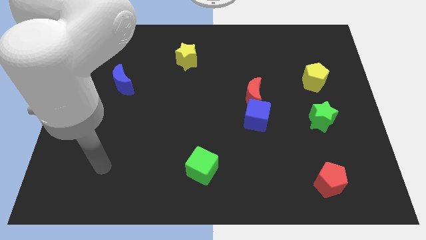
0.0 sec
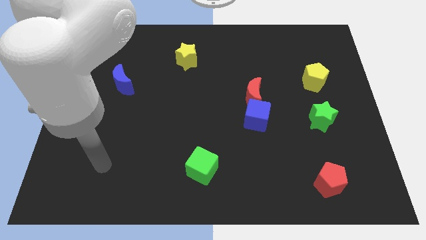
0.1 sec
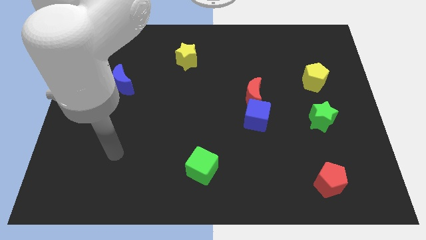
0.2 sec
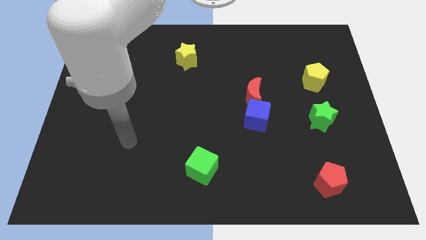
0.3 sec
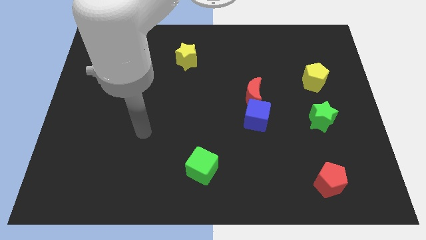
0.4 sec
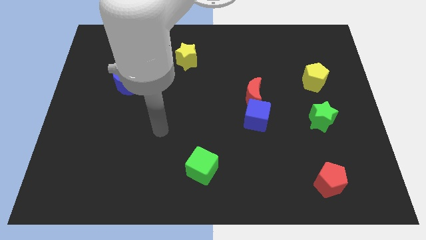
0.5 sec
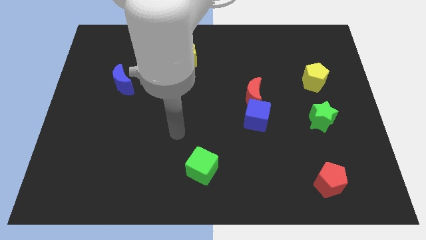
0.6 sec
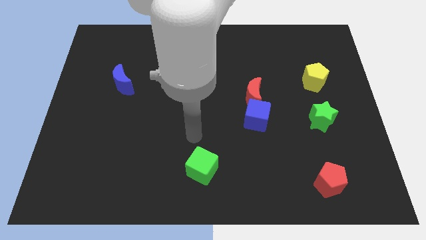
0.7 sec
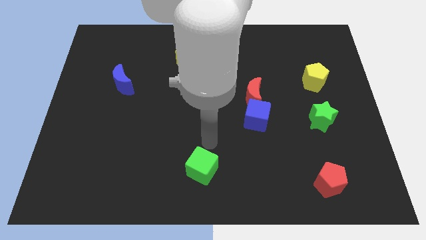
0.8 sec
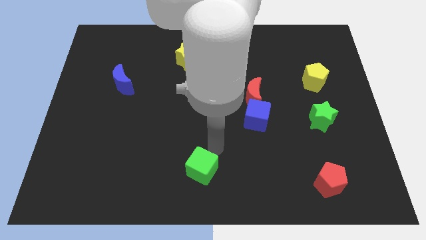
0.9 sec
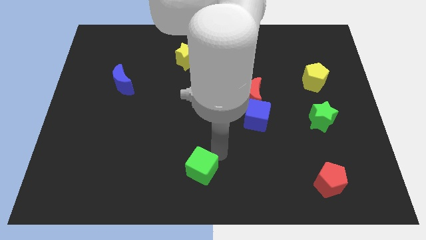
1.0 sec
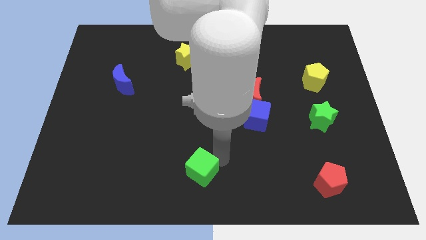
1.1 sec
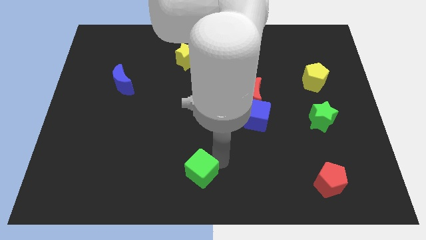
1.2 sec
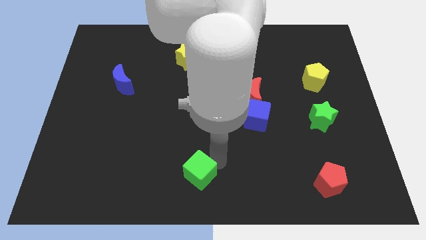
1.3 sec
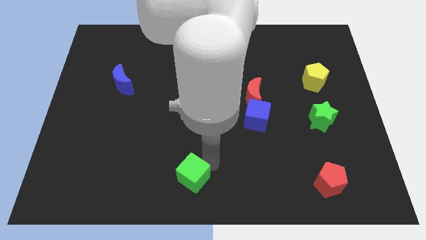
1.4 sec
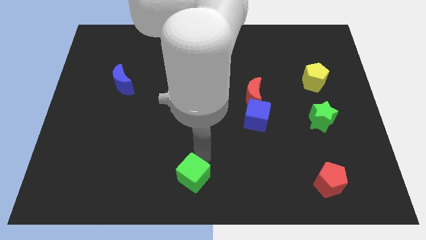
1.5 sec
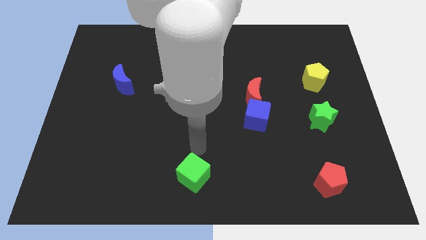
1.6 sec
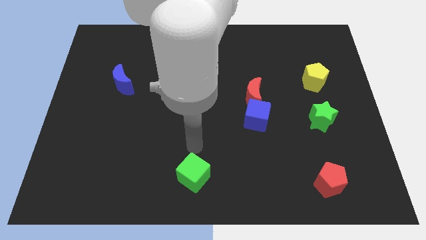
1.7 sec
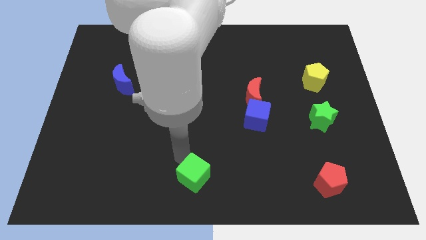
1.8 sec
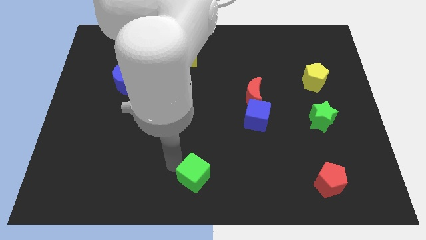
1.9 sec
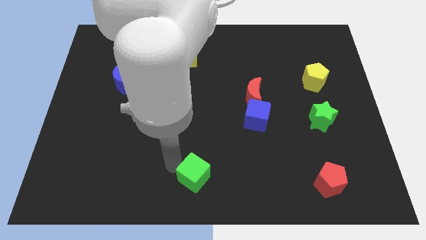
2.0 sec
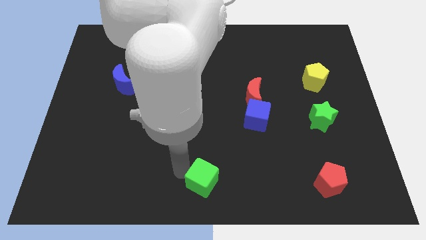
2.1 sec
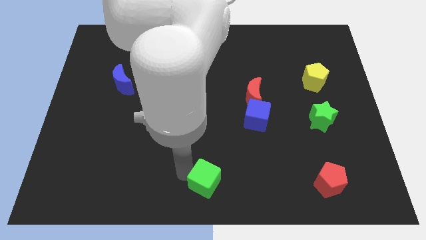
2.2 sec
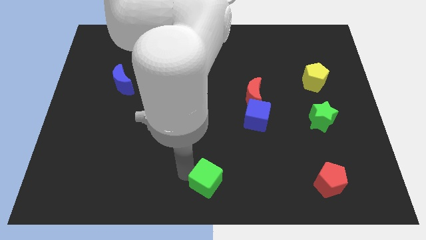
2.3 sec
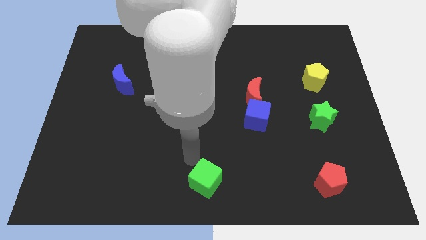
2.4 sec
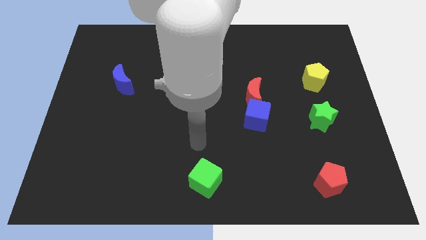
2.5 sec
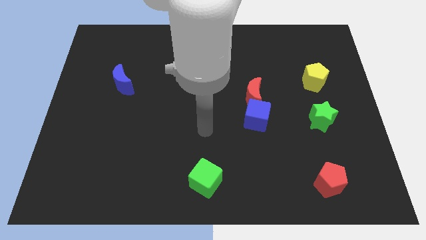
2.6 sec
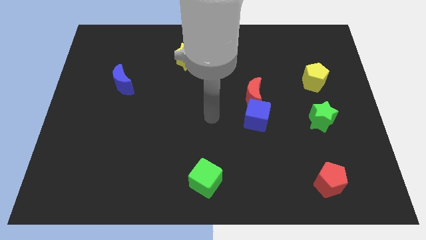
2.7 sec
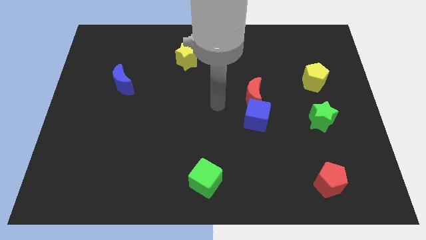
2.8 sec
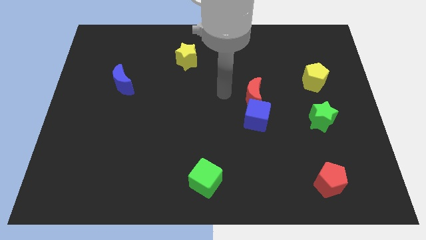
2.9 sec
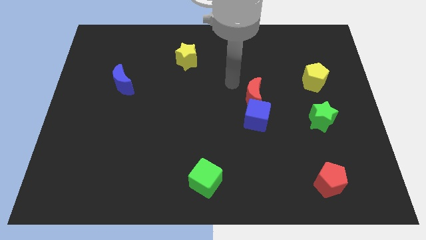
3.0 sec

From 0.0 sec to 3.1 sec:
push the green cube to the bottom center

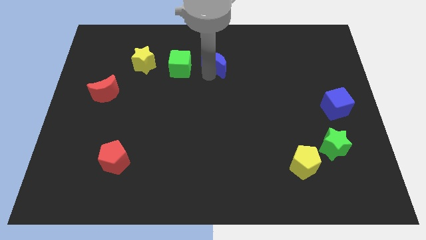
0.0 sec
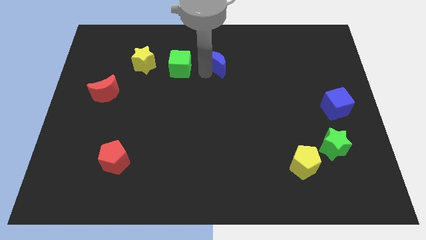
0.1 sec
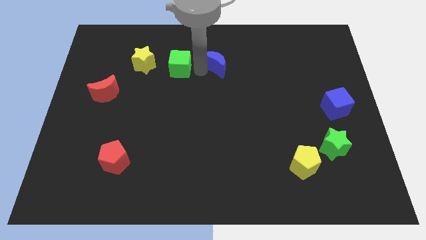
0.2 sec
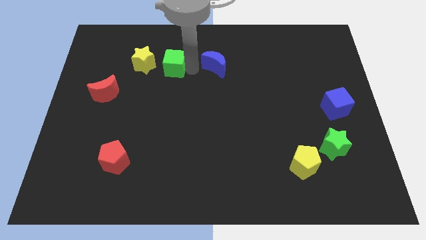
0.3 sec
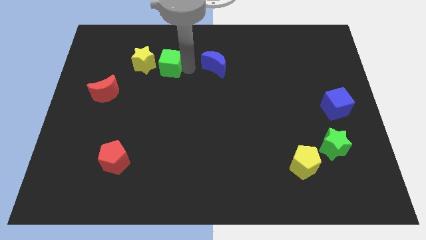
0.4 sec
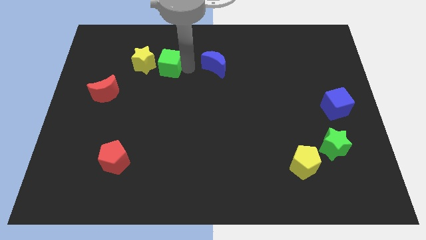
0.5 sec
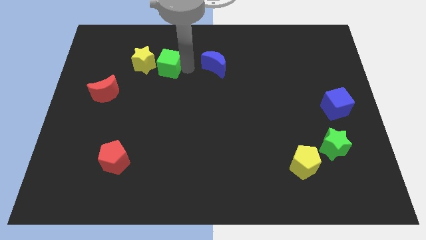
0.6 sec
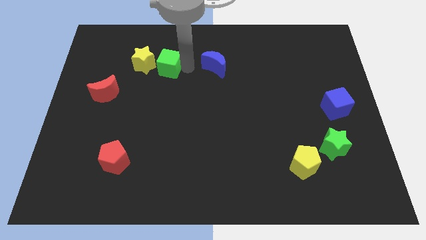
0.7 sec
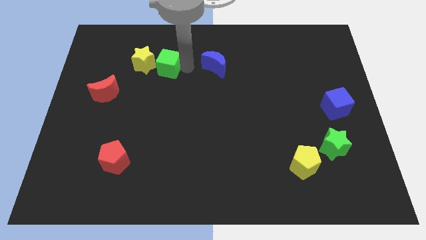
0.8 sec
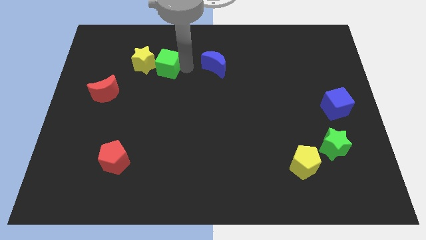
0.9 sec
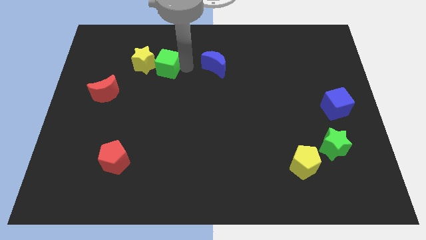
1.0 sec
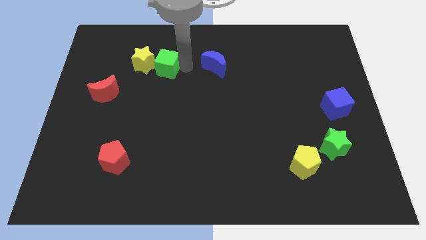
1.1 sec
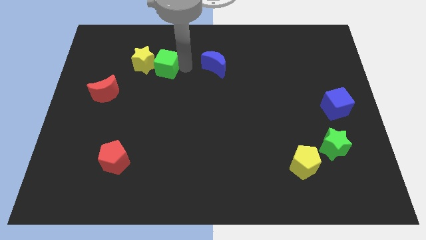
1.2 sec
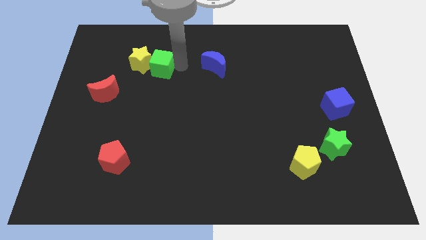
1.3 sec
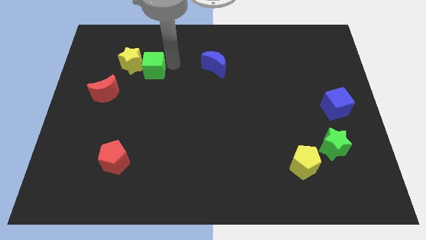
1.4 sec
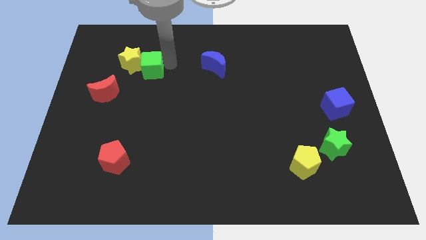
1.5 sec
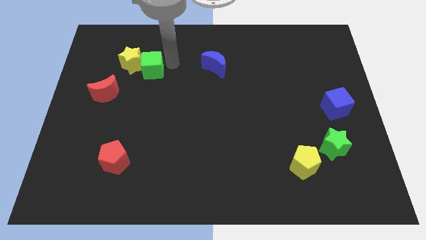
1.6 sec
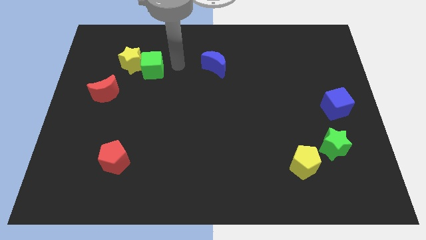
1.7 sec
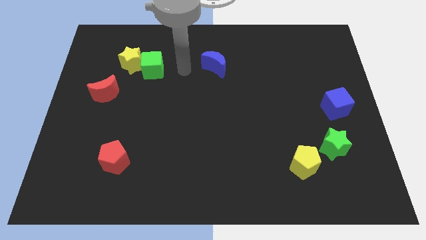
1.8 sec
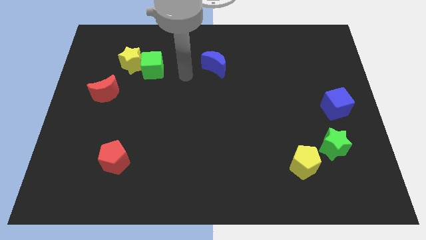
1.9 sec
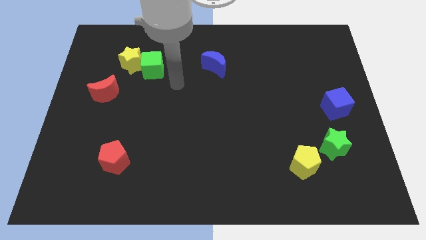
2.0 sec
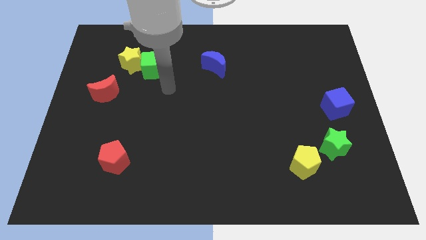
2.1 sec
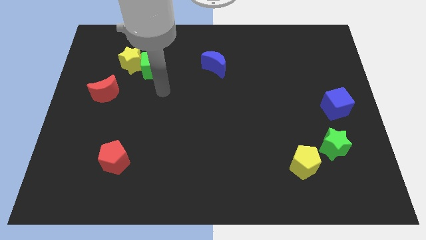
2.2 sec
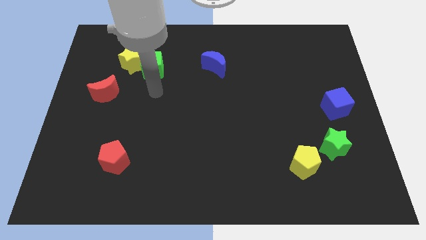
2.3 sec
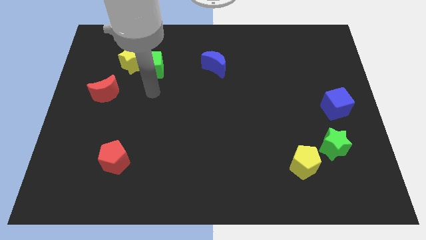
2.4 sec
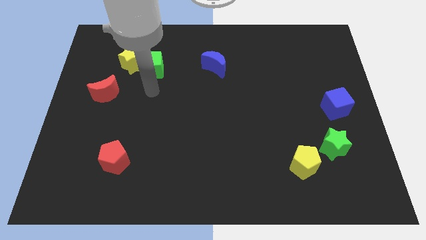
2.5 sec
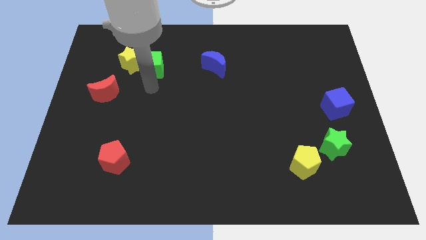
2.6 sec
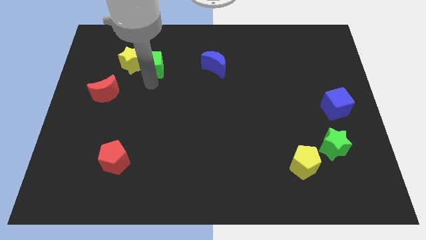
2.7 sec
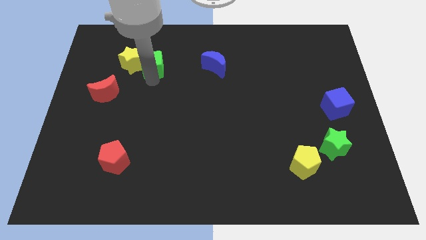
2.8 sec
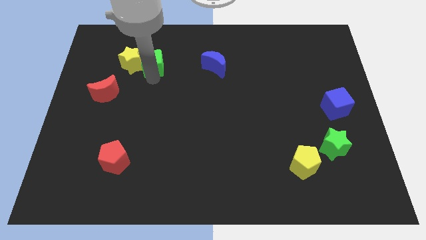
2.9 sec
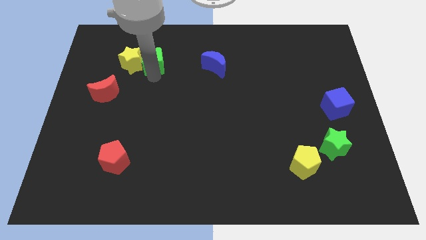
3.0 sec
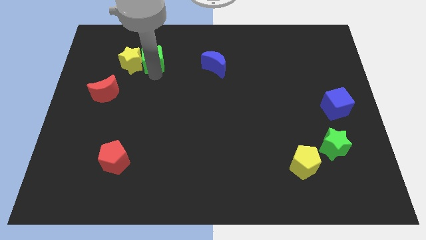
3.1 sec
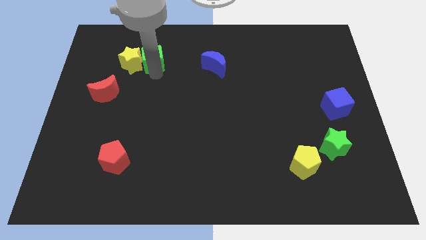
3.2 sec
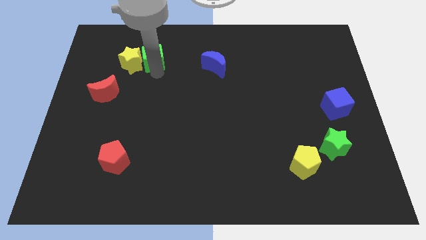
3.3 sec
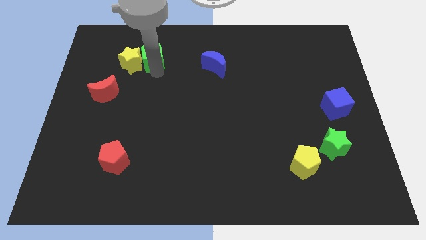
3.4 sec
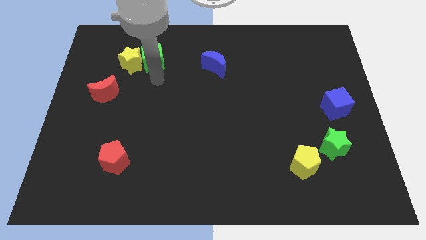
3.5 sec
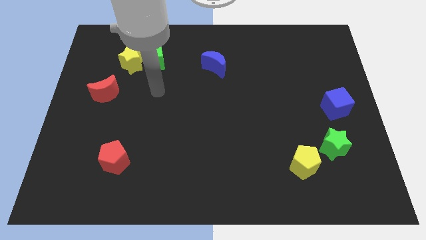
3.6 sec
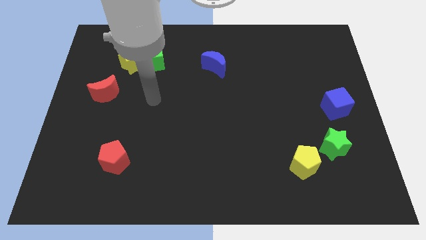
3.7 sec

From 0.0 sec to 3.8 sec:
place the green cube at the right side of the yellow star

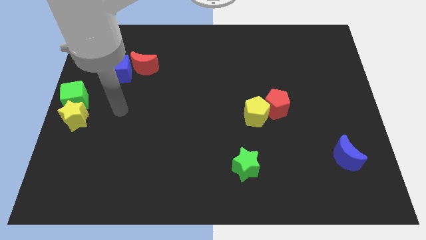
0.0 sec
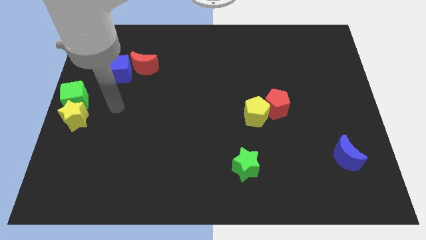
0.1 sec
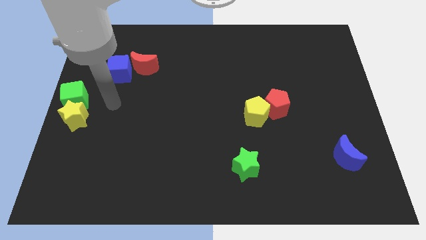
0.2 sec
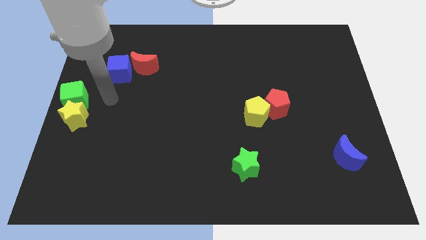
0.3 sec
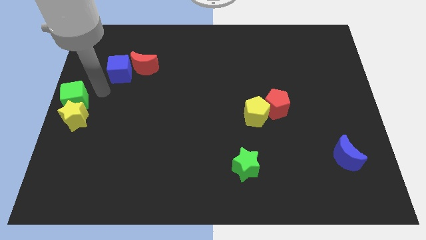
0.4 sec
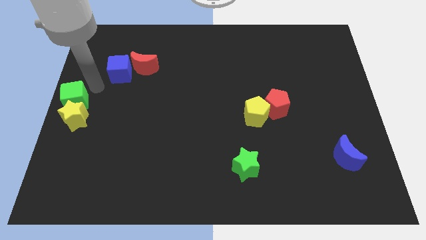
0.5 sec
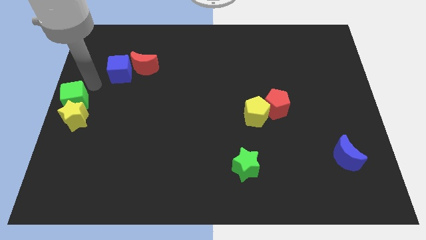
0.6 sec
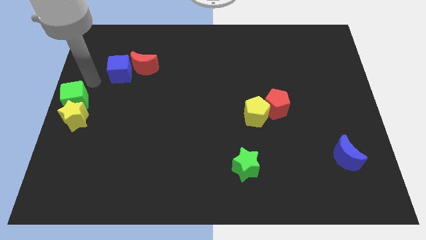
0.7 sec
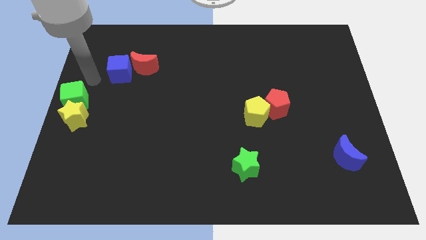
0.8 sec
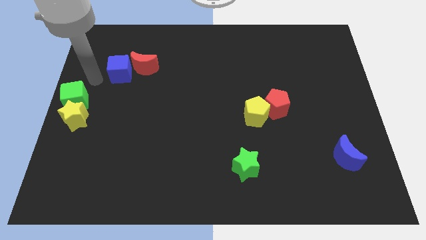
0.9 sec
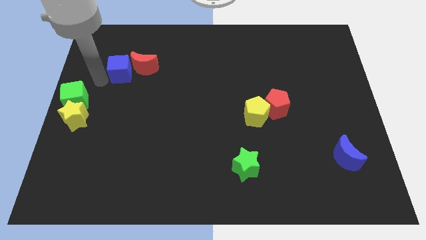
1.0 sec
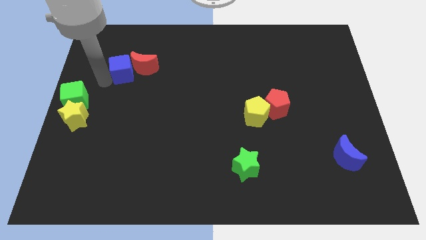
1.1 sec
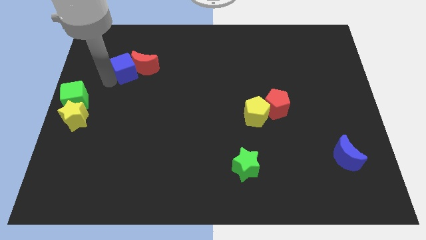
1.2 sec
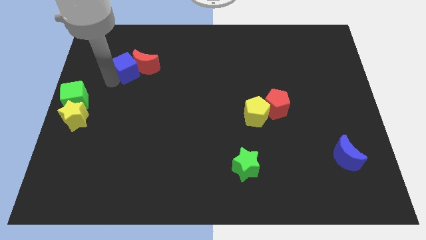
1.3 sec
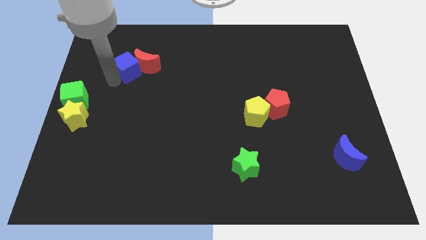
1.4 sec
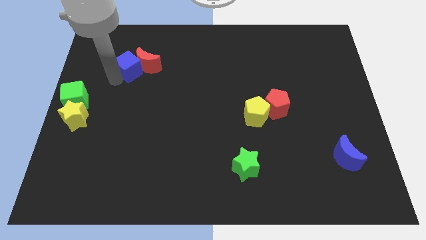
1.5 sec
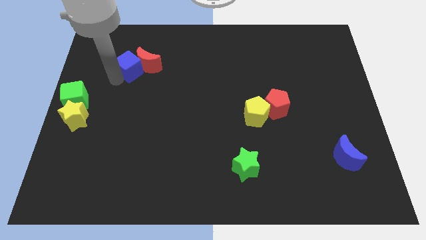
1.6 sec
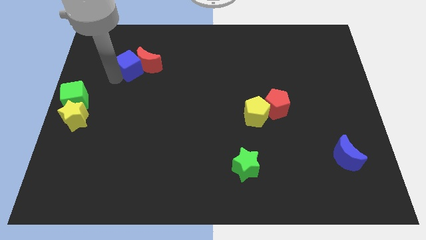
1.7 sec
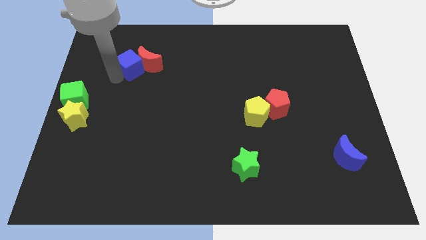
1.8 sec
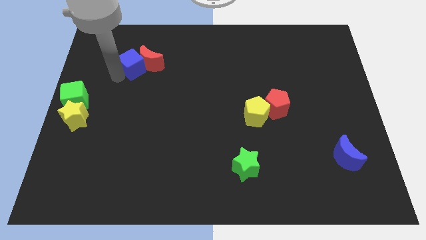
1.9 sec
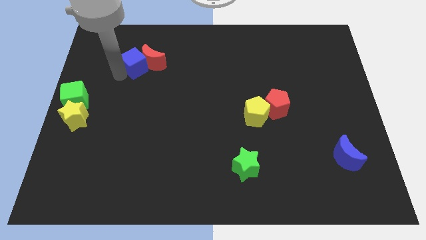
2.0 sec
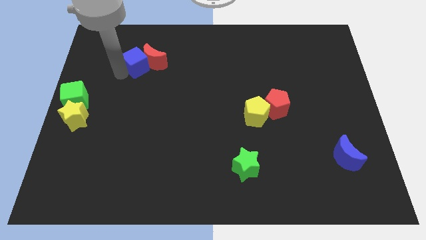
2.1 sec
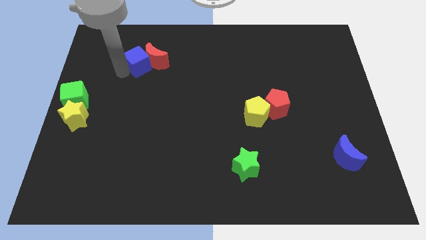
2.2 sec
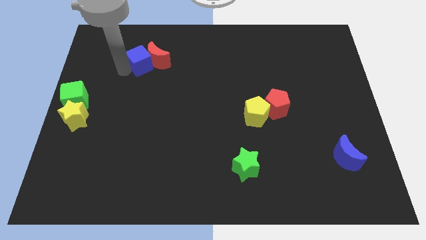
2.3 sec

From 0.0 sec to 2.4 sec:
push the blue cube into red moon to the left
